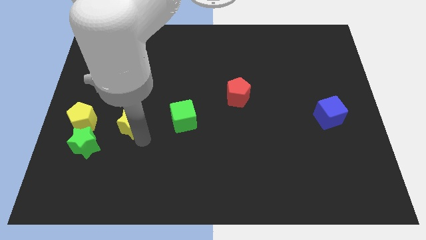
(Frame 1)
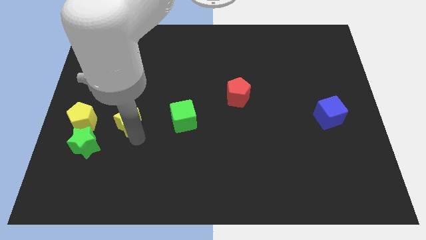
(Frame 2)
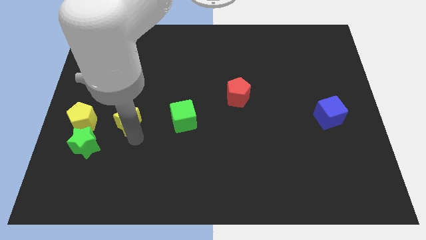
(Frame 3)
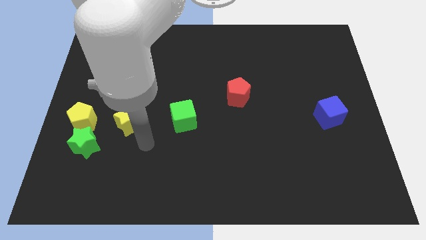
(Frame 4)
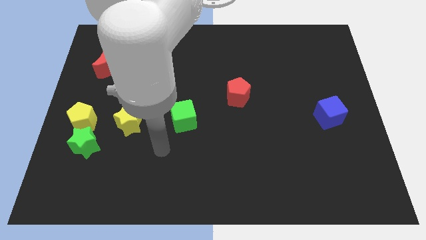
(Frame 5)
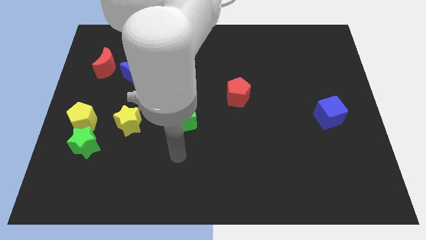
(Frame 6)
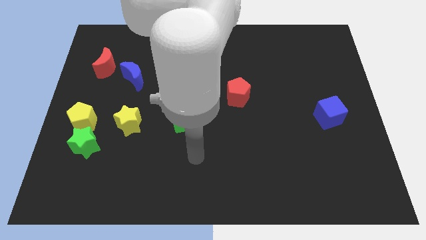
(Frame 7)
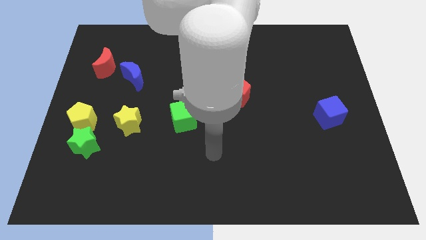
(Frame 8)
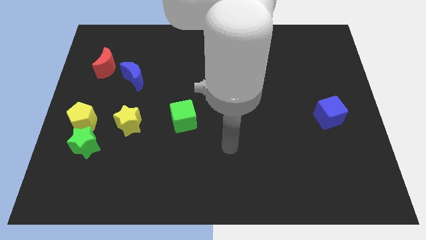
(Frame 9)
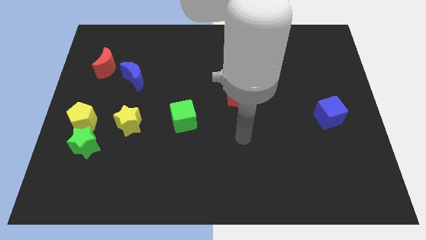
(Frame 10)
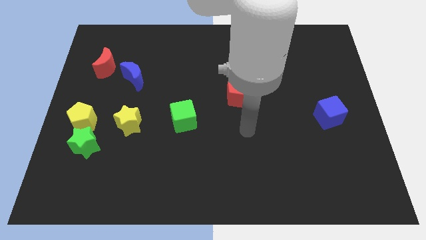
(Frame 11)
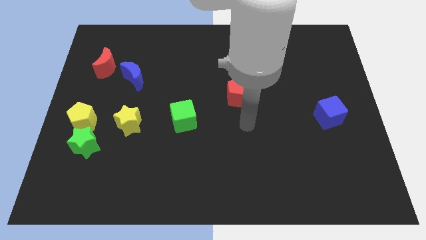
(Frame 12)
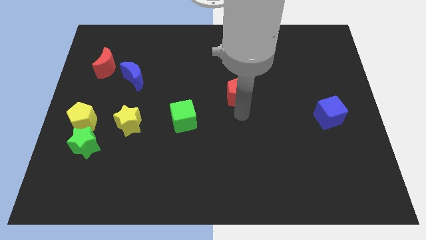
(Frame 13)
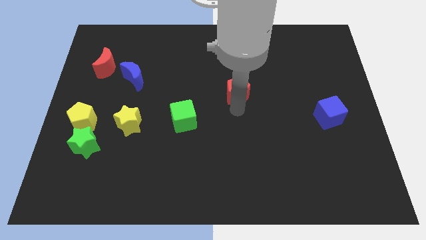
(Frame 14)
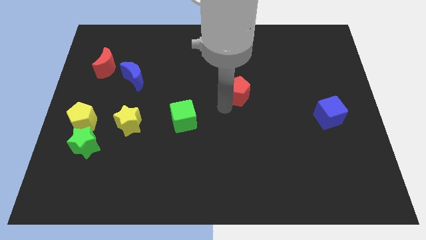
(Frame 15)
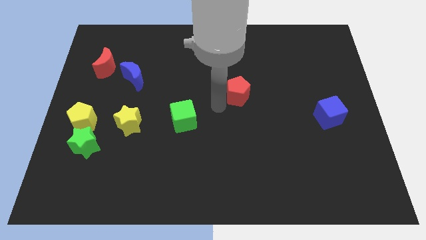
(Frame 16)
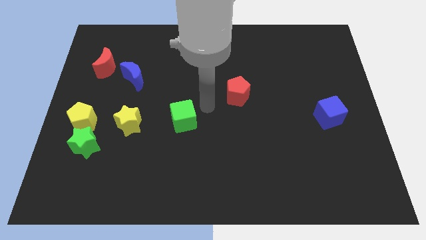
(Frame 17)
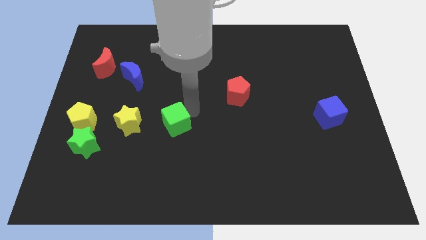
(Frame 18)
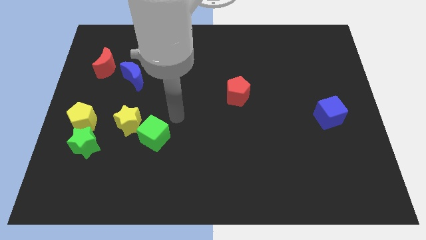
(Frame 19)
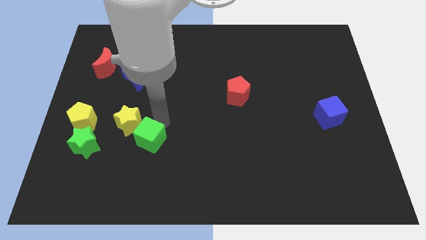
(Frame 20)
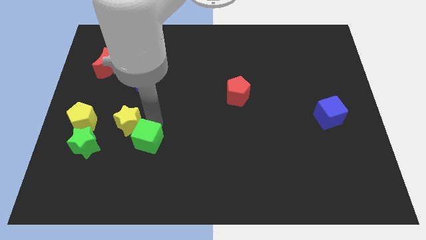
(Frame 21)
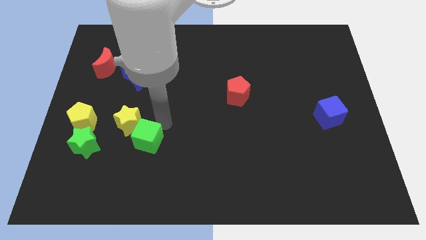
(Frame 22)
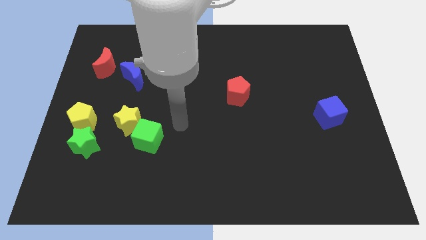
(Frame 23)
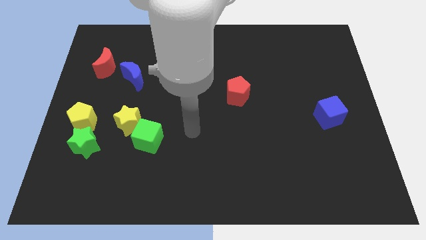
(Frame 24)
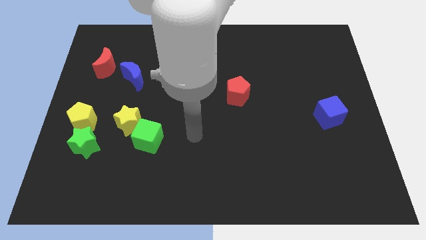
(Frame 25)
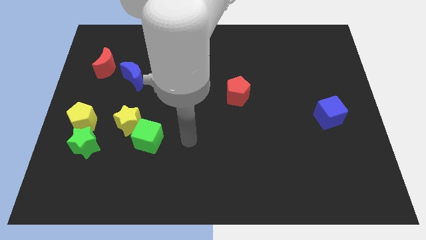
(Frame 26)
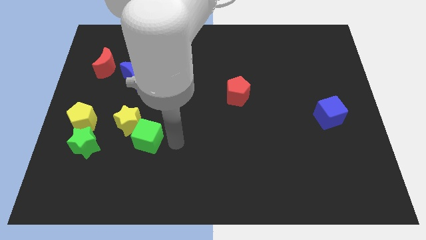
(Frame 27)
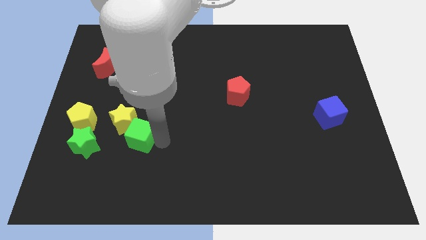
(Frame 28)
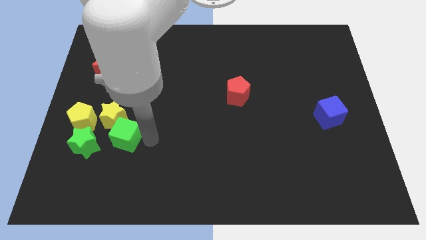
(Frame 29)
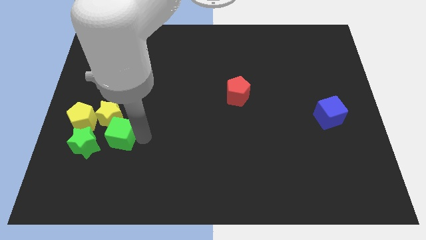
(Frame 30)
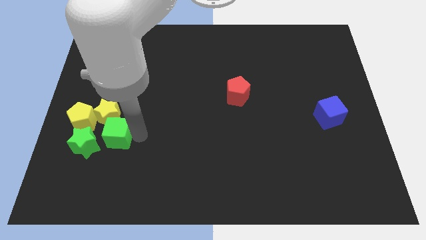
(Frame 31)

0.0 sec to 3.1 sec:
push the yellow star to the right side of the yellow pentagon with the help of the green cube

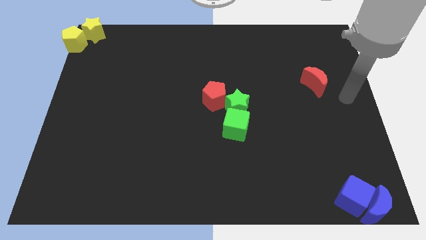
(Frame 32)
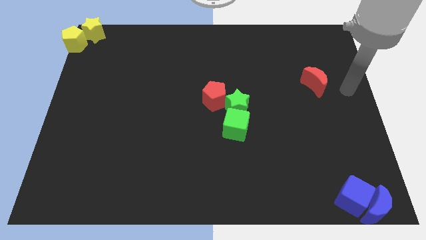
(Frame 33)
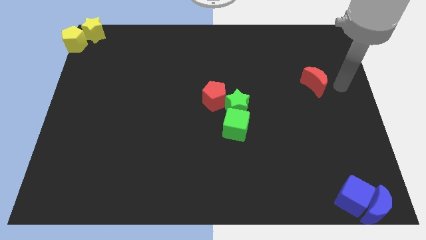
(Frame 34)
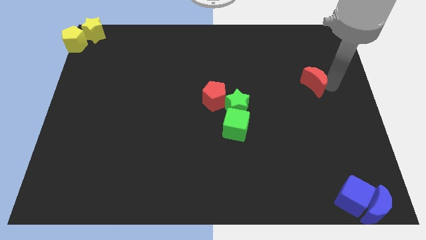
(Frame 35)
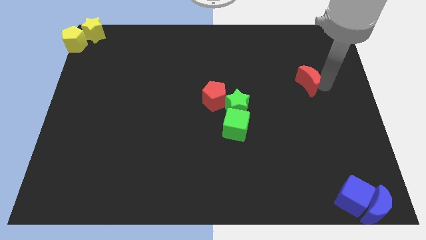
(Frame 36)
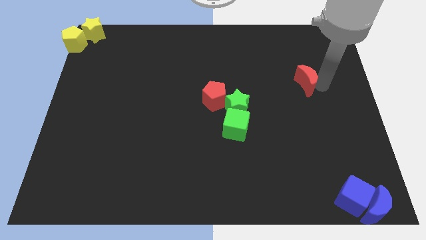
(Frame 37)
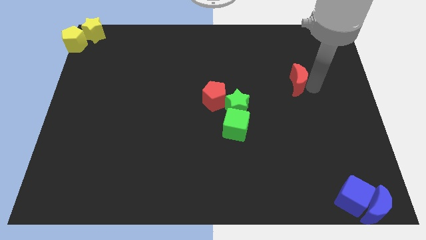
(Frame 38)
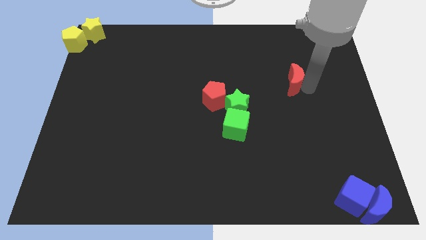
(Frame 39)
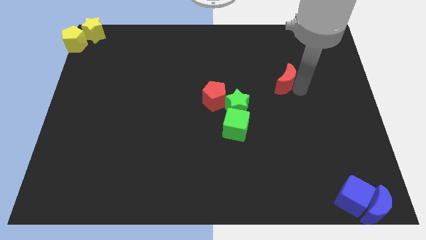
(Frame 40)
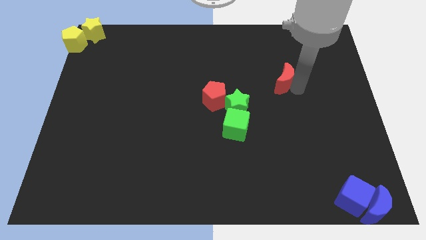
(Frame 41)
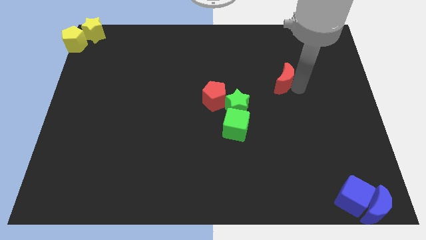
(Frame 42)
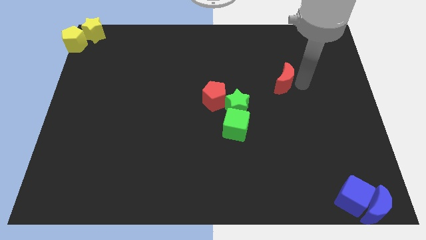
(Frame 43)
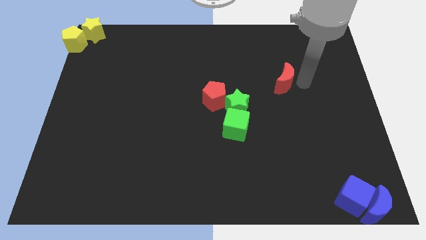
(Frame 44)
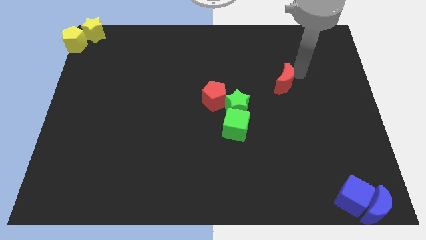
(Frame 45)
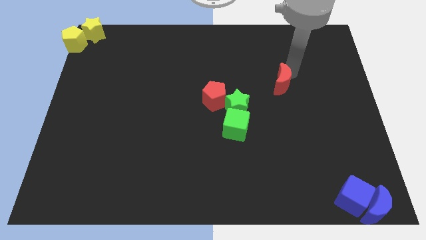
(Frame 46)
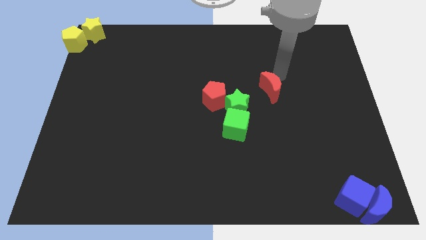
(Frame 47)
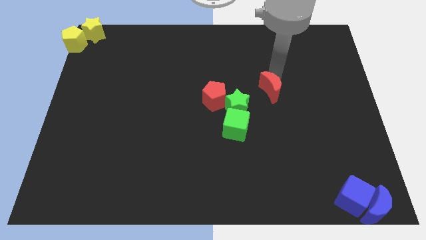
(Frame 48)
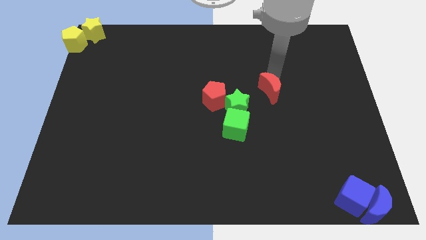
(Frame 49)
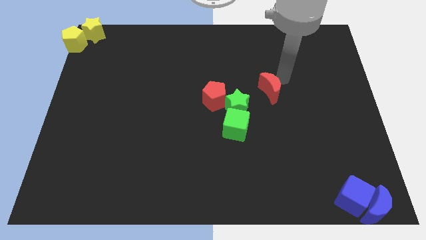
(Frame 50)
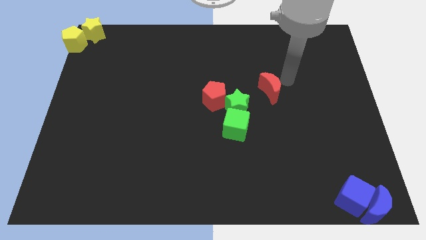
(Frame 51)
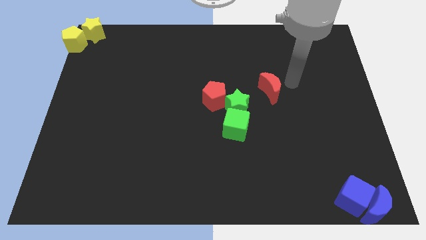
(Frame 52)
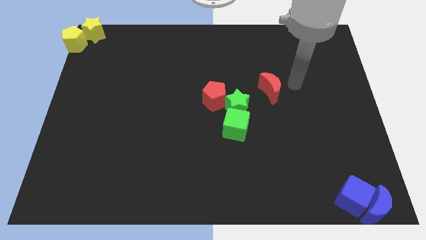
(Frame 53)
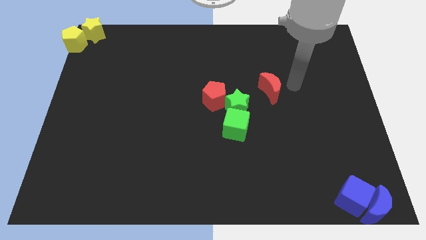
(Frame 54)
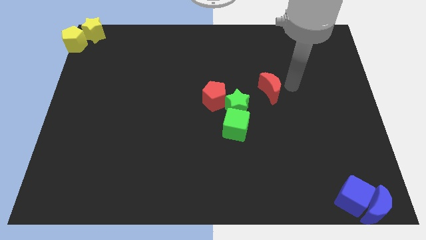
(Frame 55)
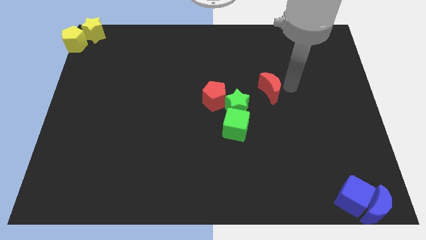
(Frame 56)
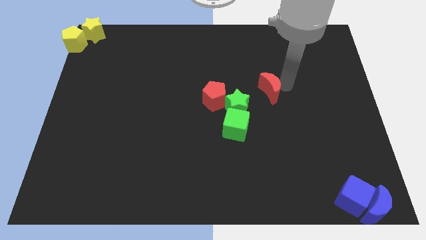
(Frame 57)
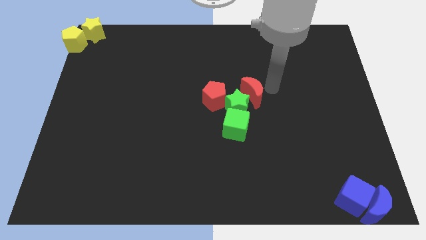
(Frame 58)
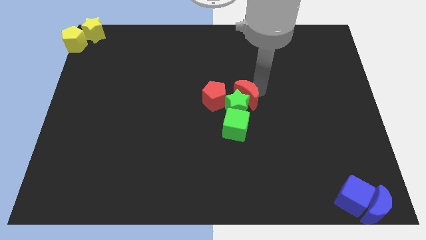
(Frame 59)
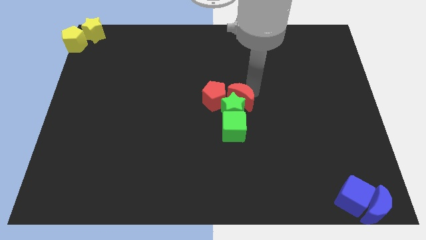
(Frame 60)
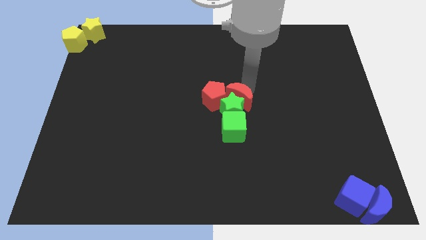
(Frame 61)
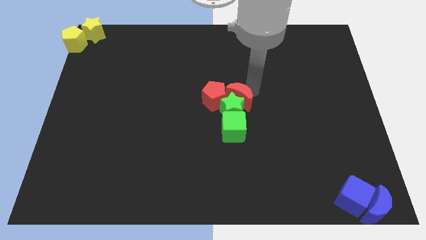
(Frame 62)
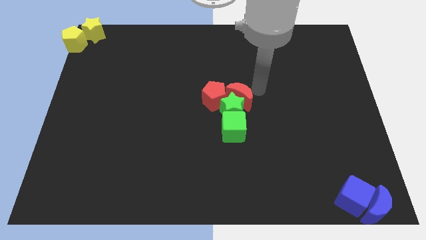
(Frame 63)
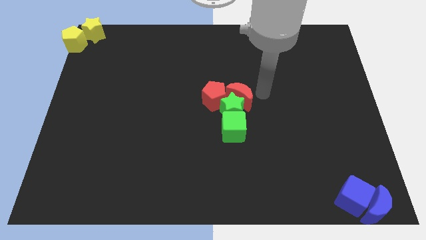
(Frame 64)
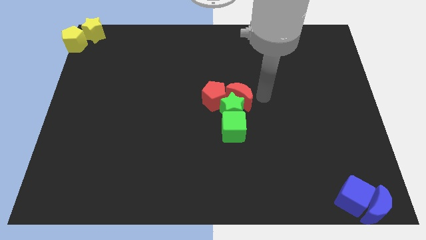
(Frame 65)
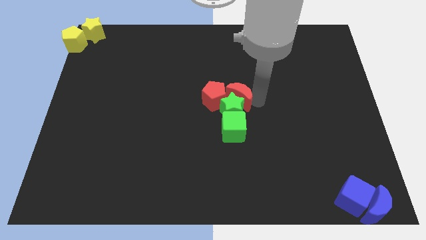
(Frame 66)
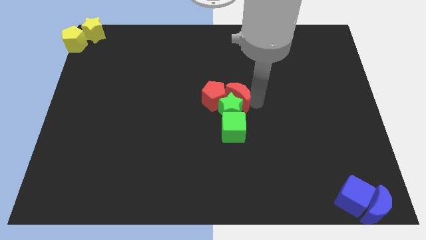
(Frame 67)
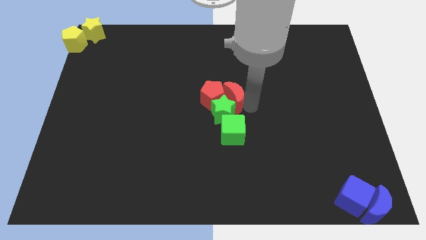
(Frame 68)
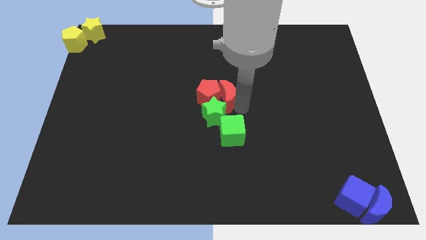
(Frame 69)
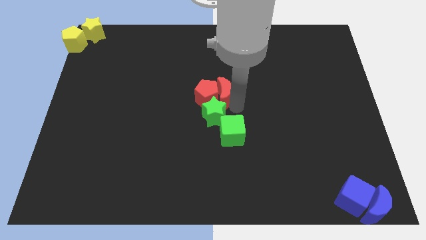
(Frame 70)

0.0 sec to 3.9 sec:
push the red crescent into the red penatgon

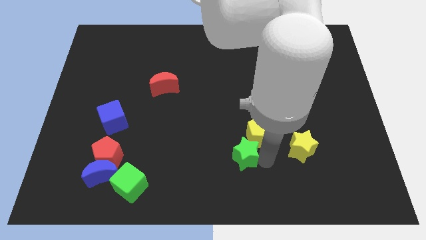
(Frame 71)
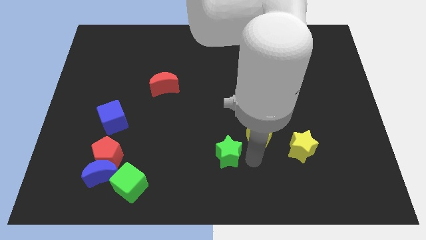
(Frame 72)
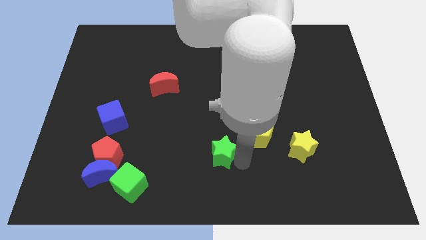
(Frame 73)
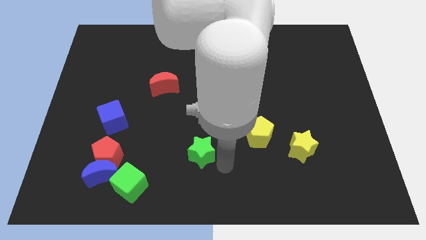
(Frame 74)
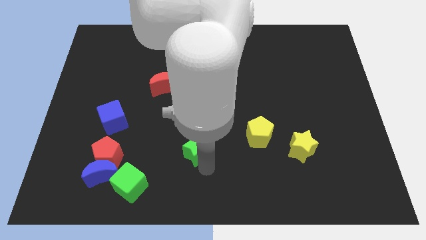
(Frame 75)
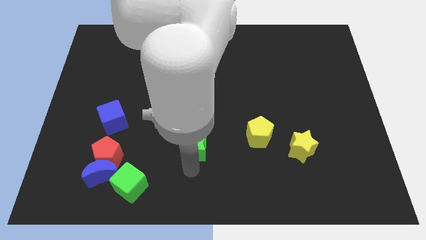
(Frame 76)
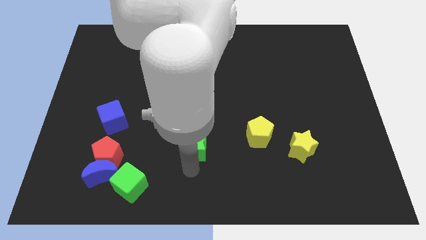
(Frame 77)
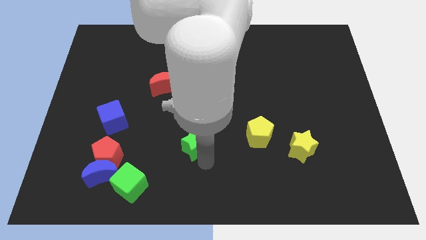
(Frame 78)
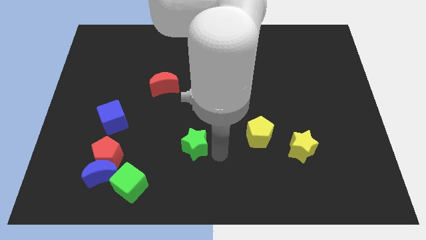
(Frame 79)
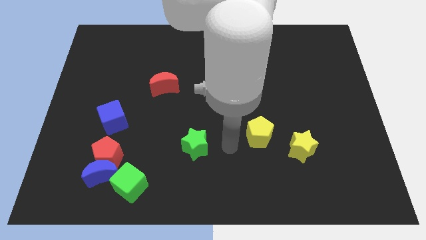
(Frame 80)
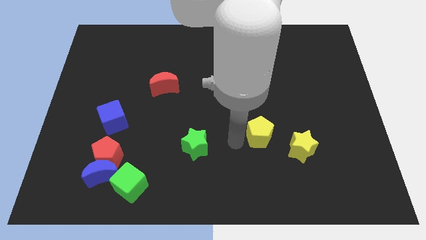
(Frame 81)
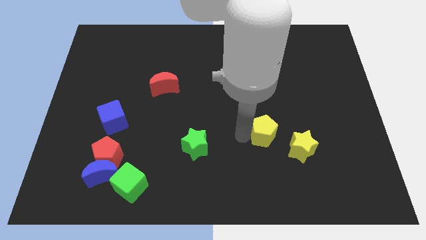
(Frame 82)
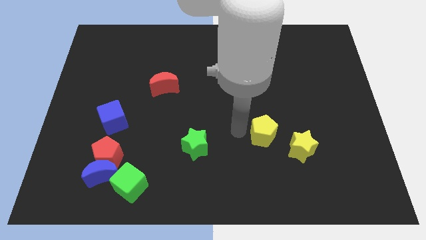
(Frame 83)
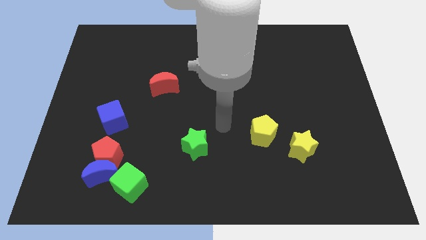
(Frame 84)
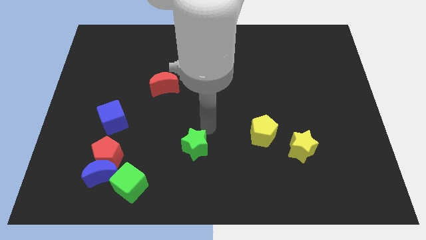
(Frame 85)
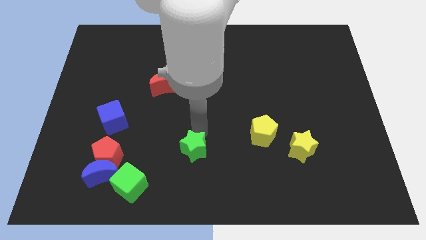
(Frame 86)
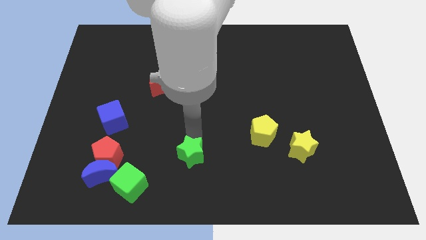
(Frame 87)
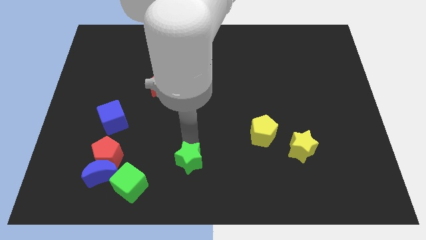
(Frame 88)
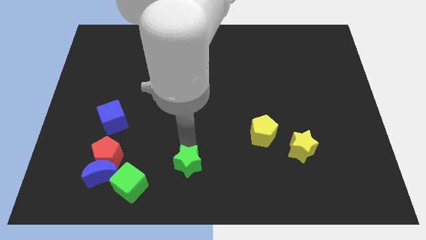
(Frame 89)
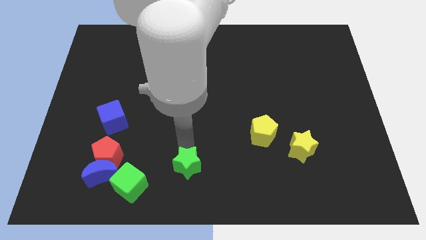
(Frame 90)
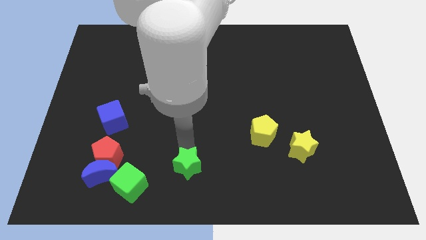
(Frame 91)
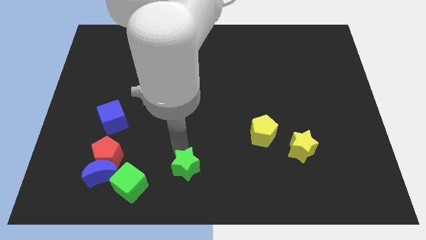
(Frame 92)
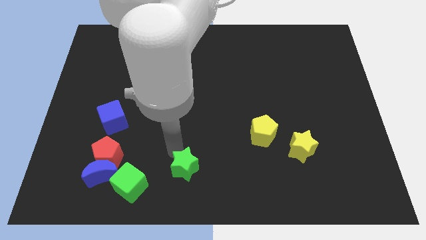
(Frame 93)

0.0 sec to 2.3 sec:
move the green star to the right of the blue crescent
